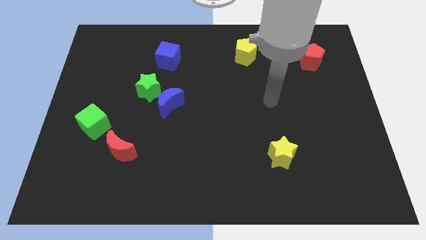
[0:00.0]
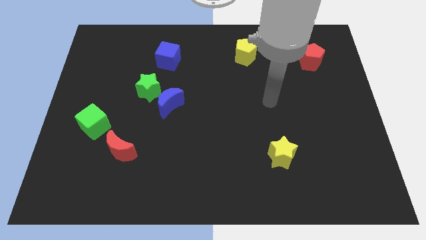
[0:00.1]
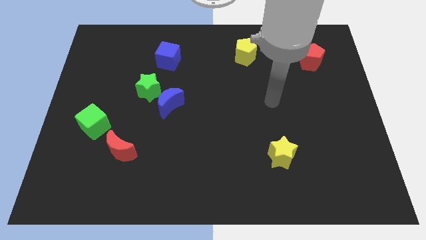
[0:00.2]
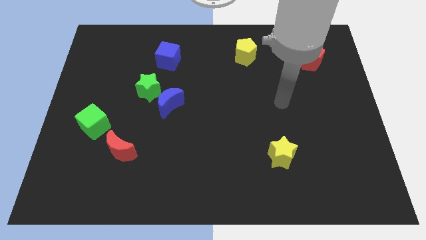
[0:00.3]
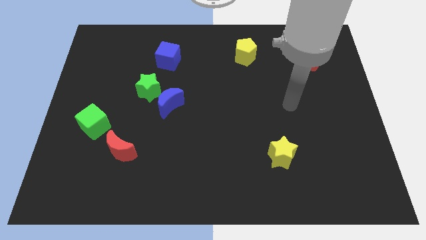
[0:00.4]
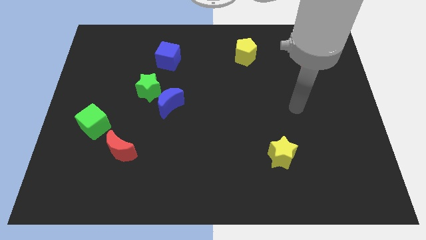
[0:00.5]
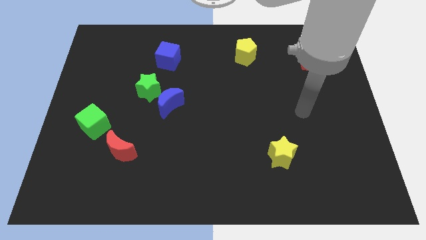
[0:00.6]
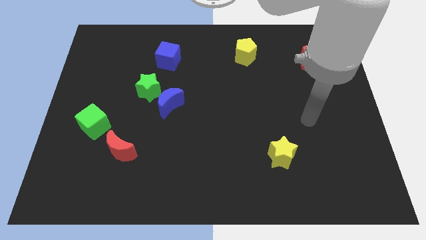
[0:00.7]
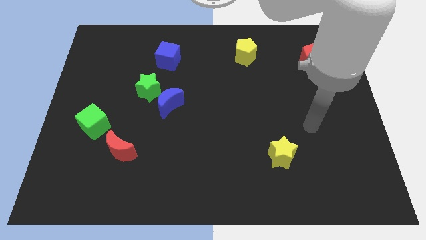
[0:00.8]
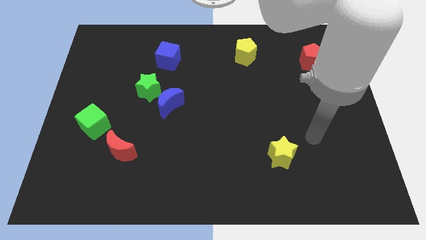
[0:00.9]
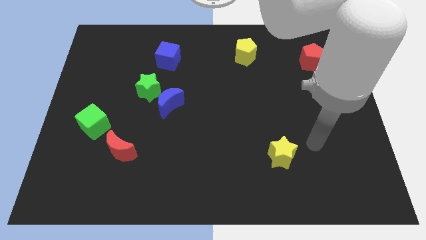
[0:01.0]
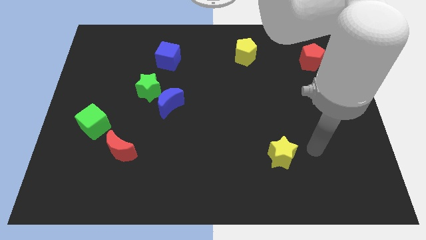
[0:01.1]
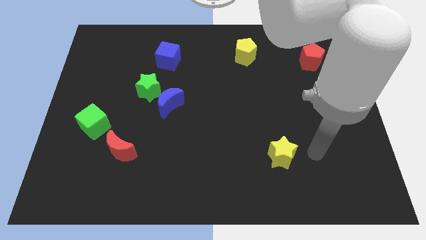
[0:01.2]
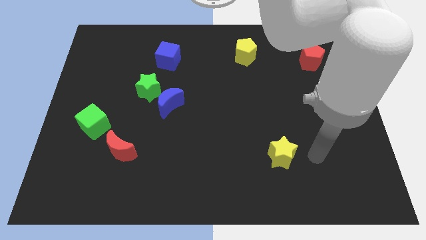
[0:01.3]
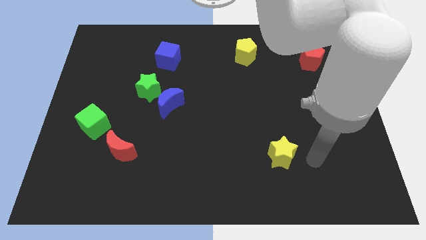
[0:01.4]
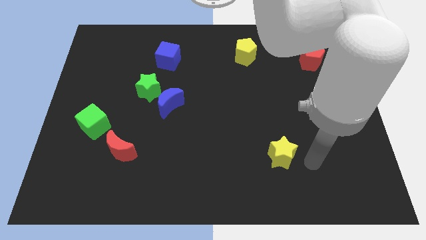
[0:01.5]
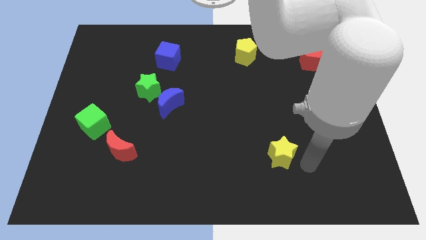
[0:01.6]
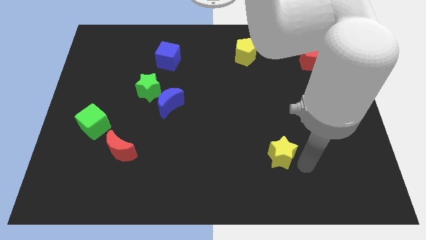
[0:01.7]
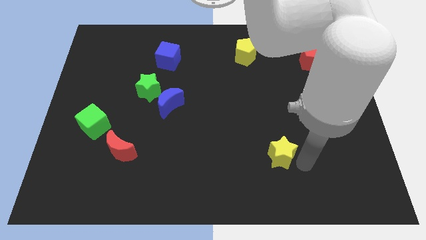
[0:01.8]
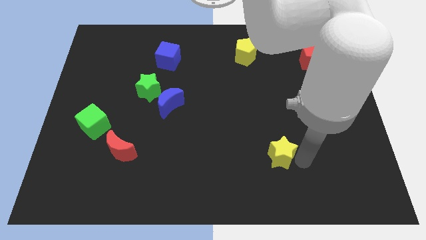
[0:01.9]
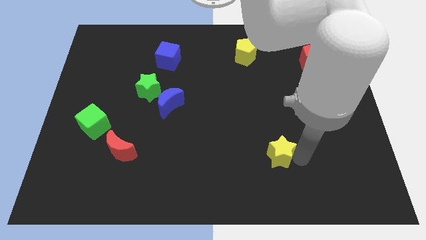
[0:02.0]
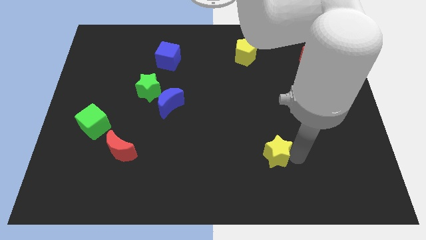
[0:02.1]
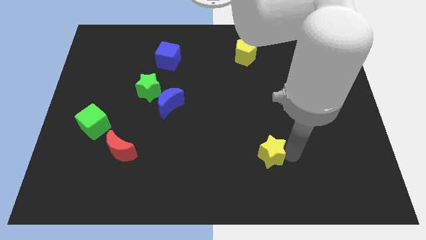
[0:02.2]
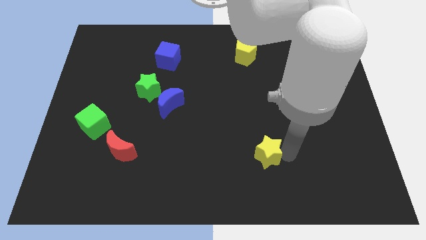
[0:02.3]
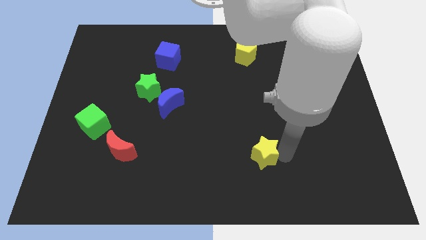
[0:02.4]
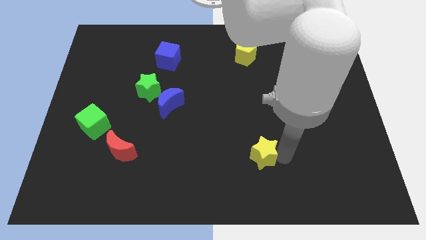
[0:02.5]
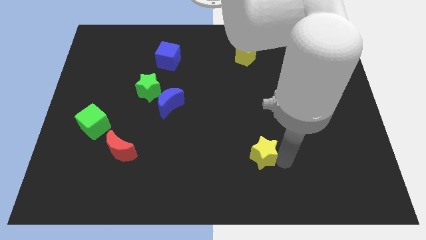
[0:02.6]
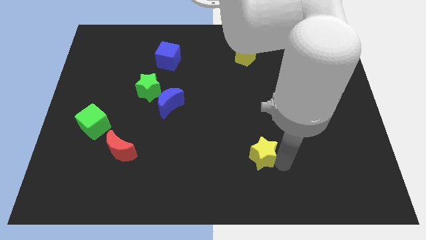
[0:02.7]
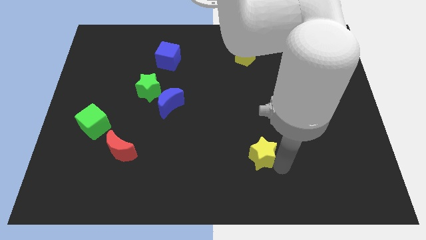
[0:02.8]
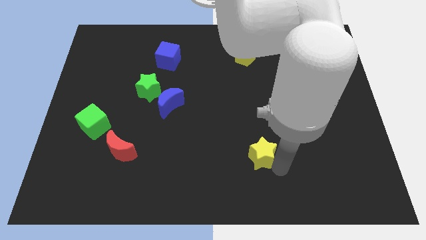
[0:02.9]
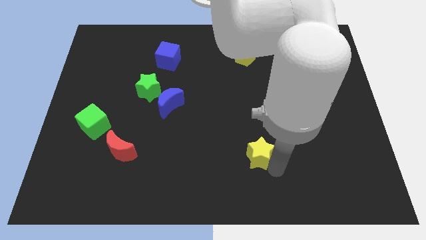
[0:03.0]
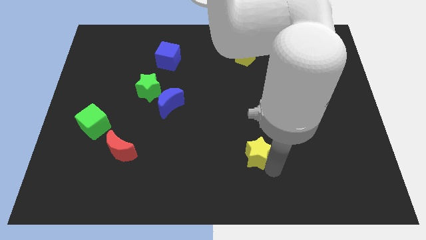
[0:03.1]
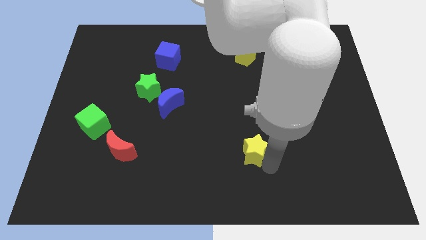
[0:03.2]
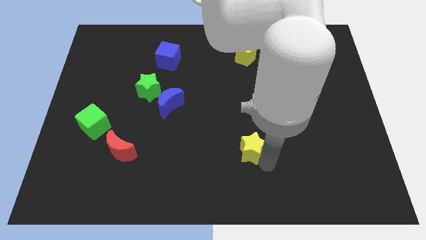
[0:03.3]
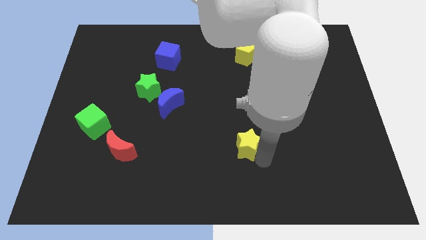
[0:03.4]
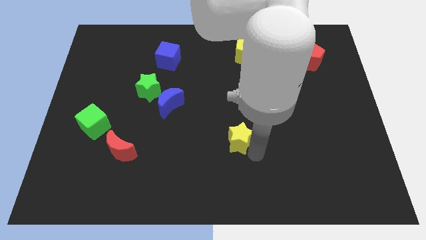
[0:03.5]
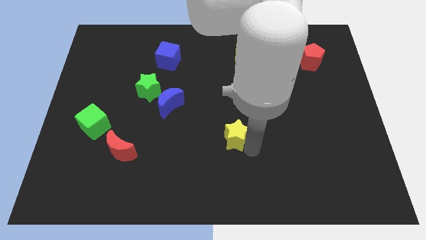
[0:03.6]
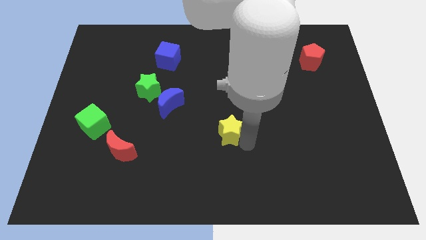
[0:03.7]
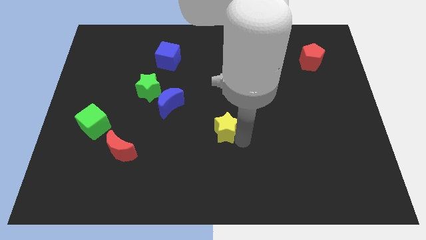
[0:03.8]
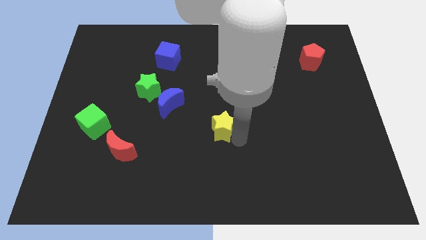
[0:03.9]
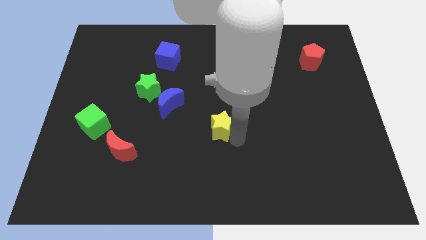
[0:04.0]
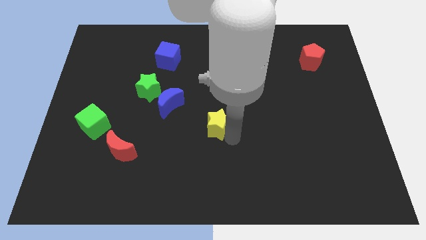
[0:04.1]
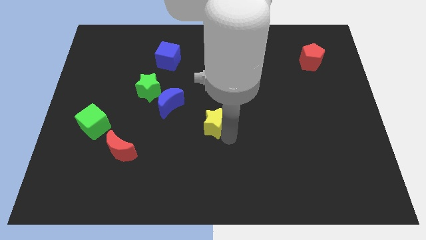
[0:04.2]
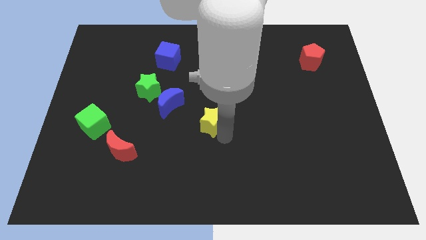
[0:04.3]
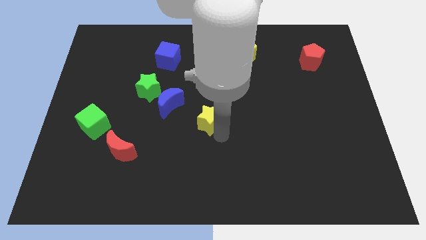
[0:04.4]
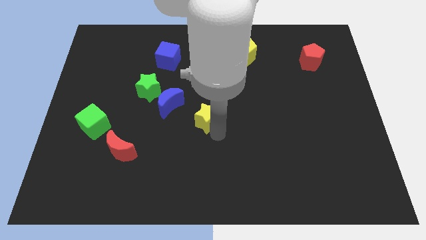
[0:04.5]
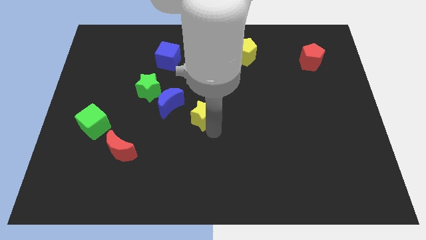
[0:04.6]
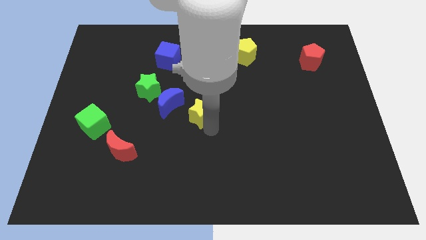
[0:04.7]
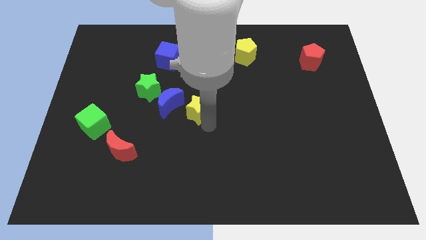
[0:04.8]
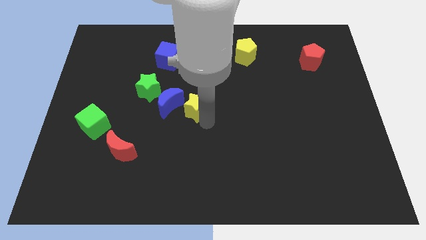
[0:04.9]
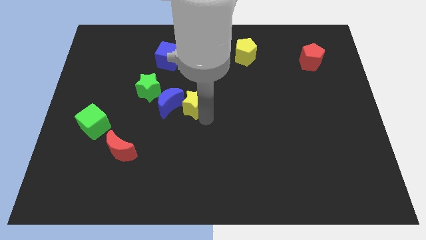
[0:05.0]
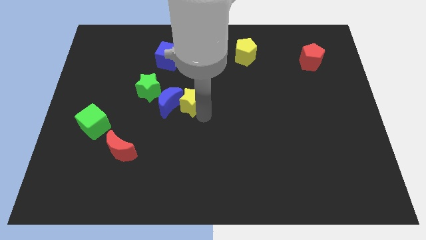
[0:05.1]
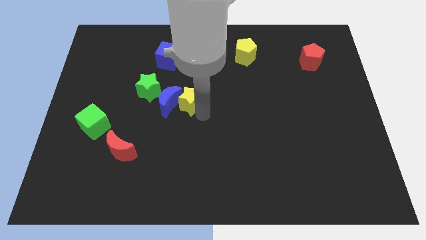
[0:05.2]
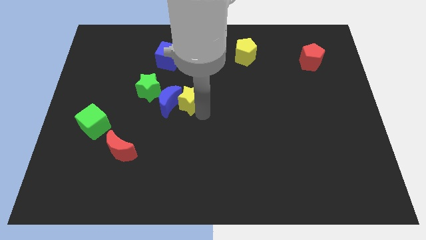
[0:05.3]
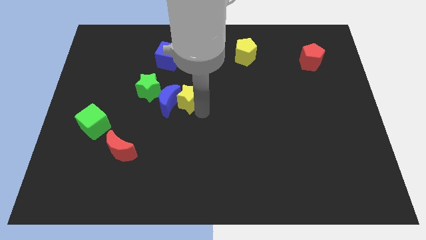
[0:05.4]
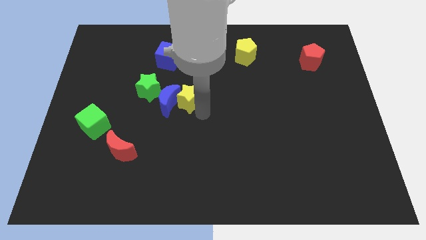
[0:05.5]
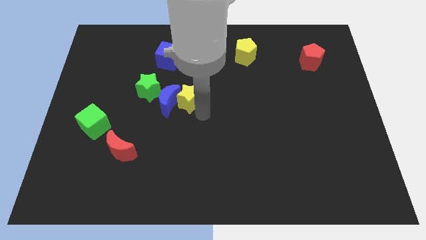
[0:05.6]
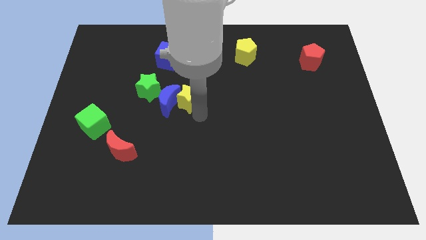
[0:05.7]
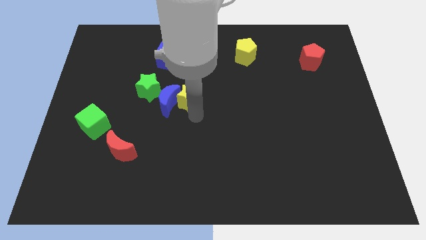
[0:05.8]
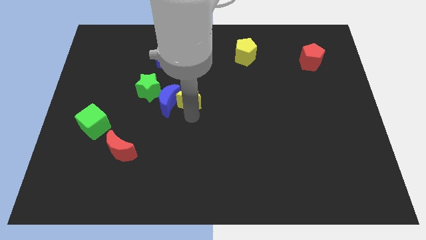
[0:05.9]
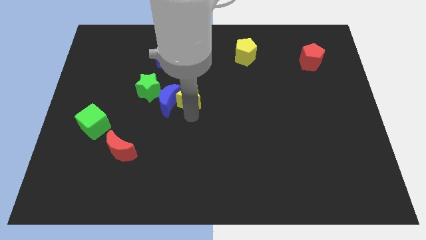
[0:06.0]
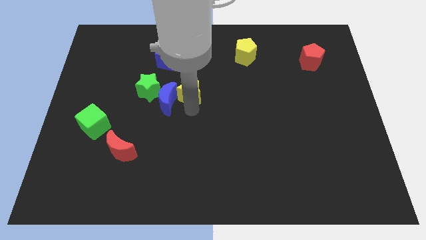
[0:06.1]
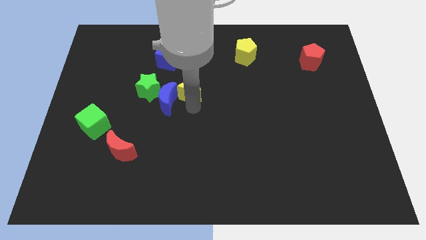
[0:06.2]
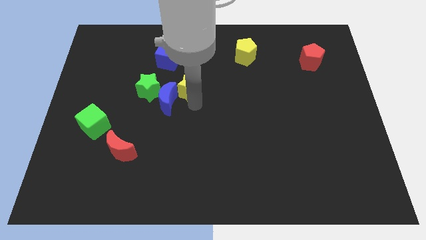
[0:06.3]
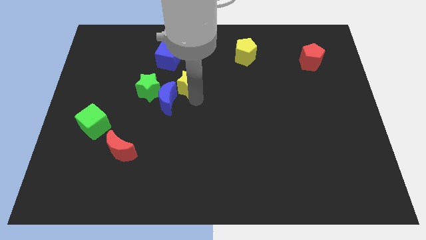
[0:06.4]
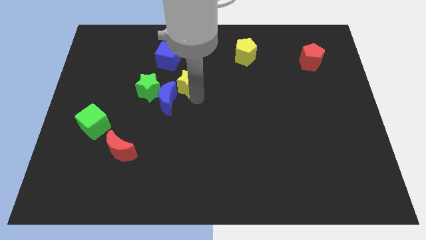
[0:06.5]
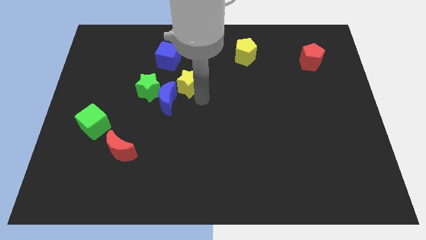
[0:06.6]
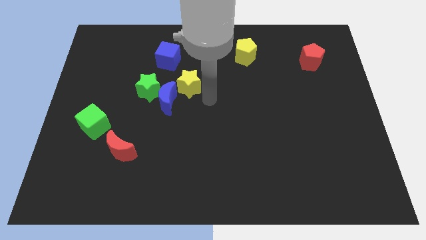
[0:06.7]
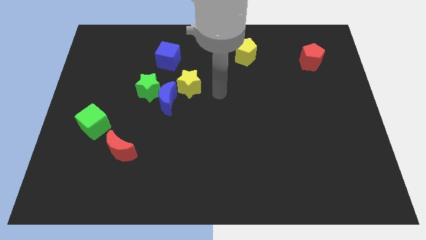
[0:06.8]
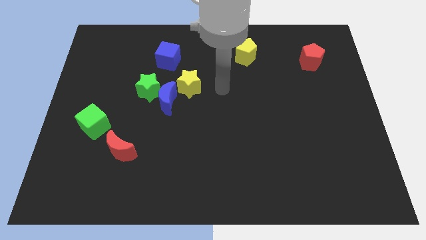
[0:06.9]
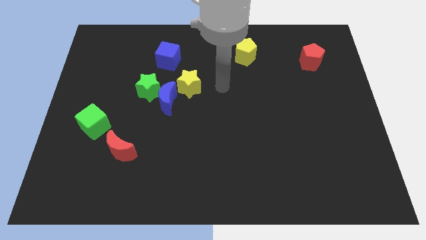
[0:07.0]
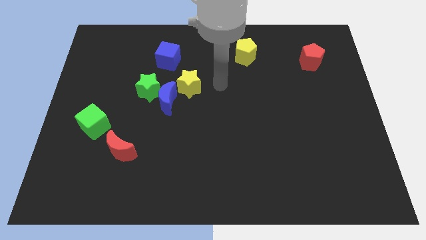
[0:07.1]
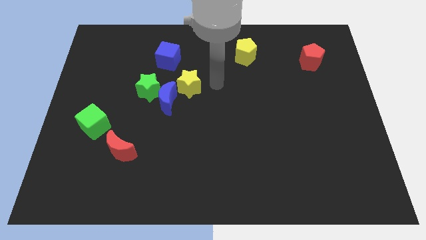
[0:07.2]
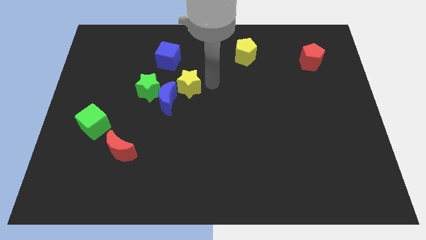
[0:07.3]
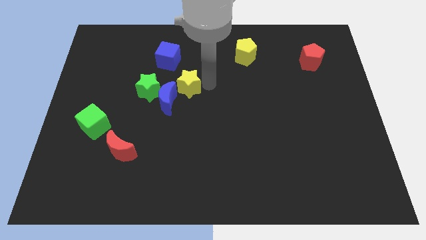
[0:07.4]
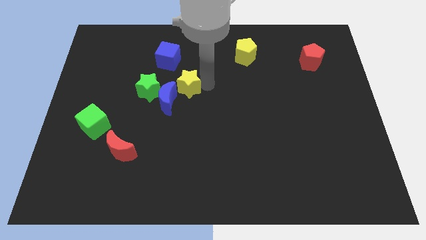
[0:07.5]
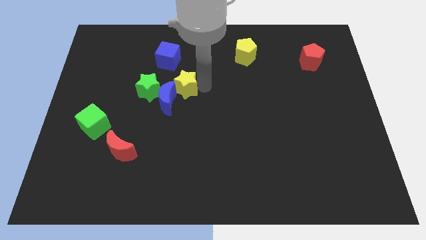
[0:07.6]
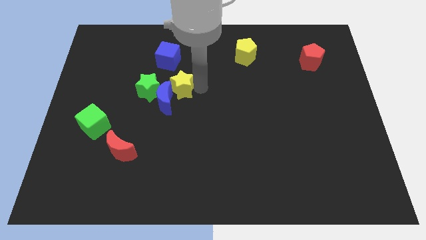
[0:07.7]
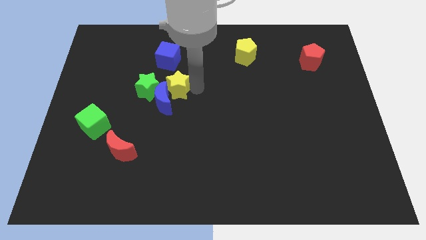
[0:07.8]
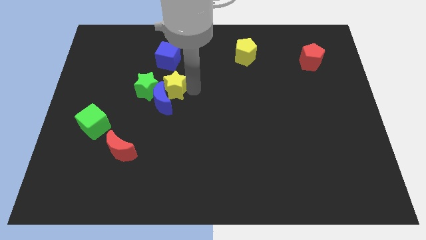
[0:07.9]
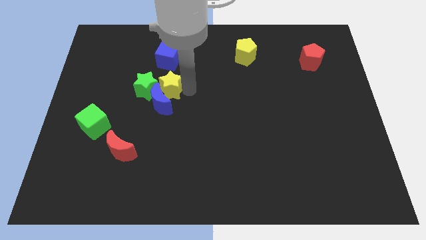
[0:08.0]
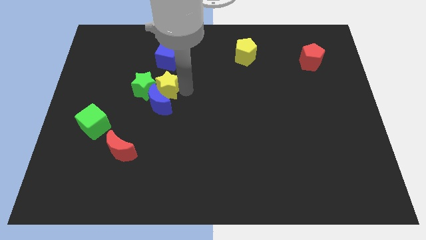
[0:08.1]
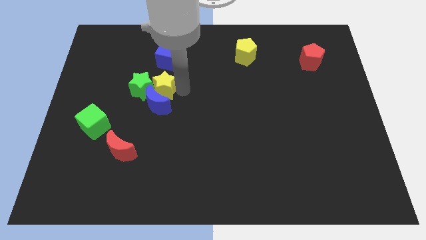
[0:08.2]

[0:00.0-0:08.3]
put the yellow star towards the green star
